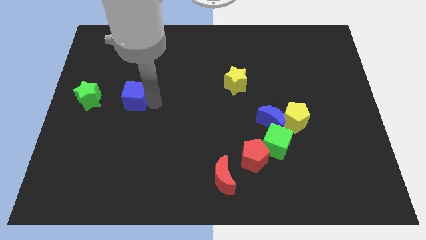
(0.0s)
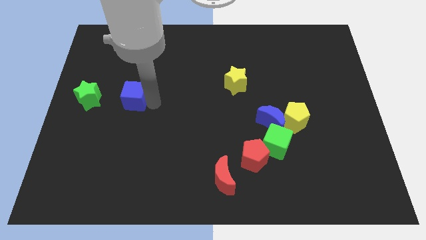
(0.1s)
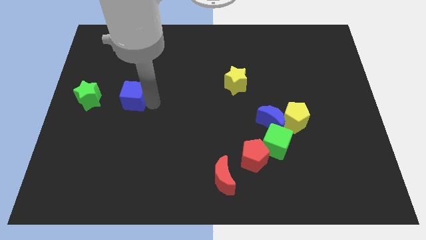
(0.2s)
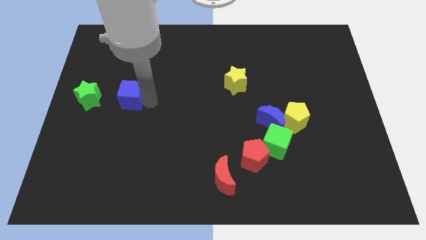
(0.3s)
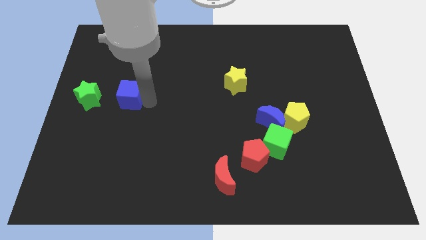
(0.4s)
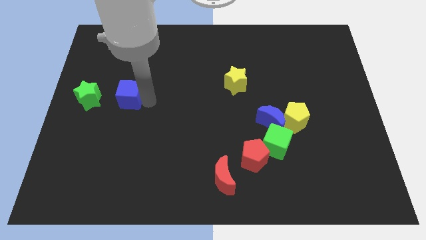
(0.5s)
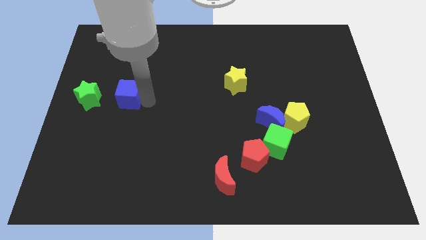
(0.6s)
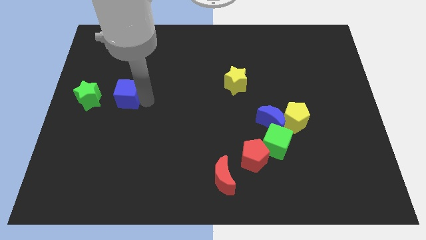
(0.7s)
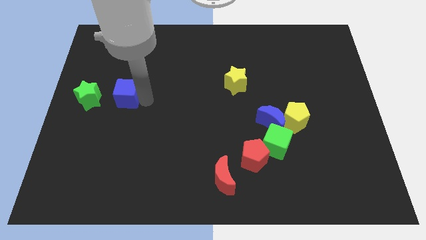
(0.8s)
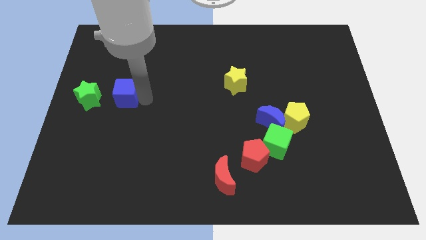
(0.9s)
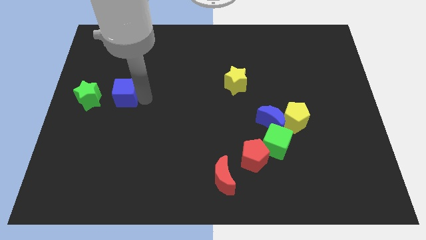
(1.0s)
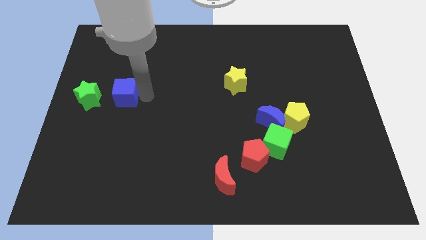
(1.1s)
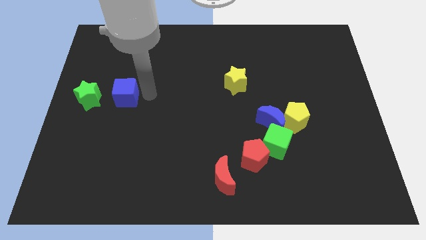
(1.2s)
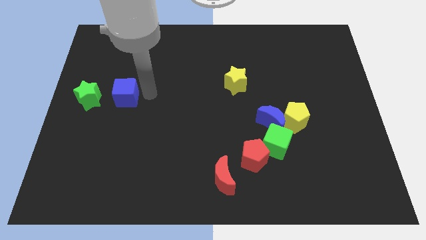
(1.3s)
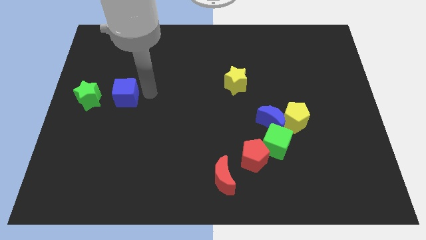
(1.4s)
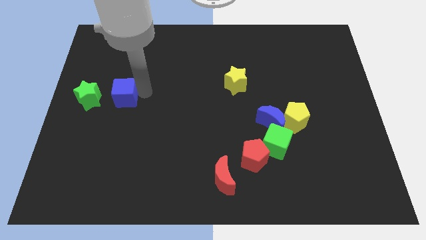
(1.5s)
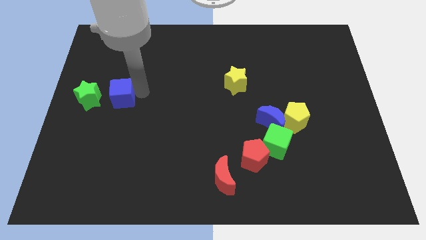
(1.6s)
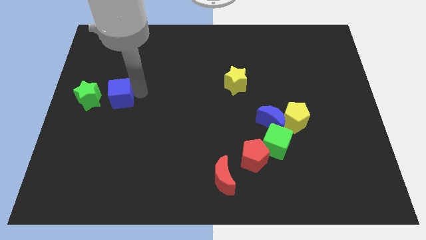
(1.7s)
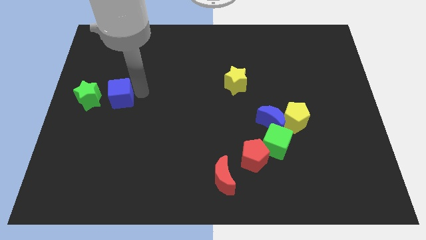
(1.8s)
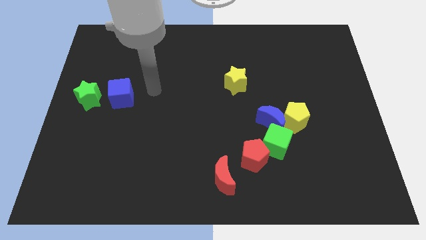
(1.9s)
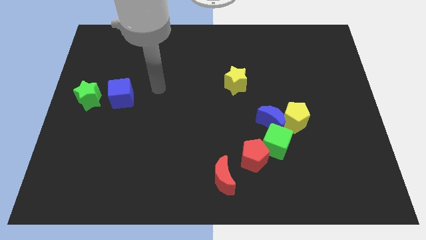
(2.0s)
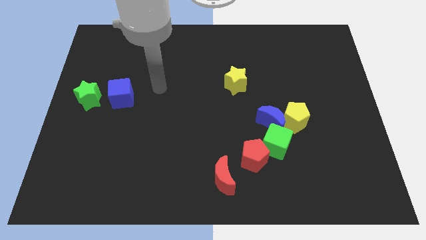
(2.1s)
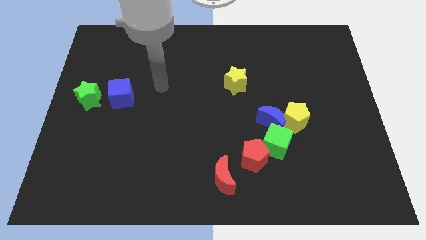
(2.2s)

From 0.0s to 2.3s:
push the blue cube to the right side of the green star

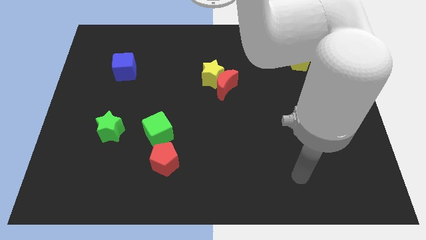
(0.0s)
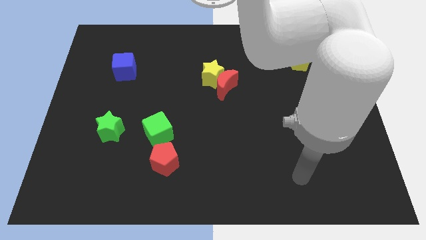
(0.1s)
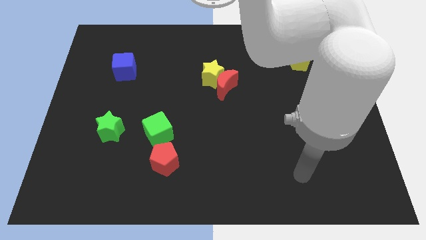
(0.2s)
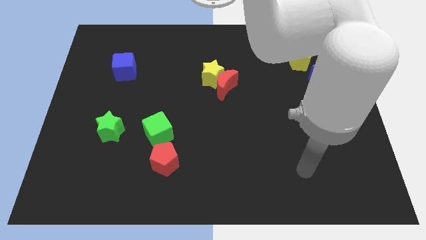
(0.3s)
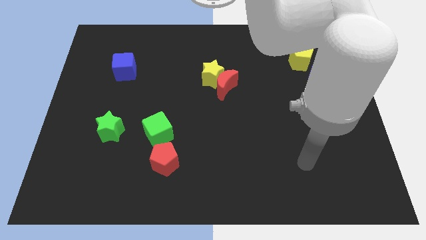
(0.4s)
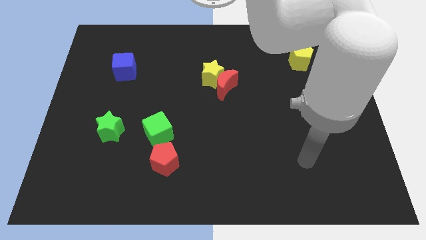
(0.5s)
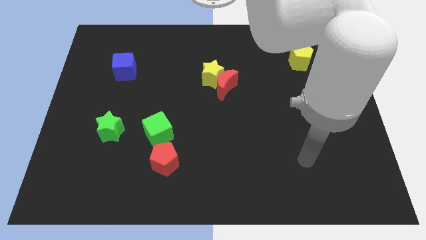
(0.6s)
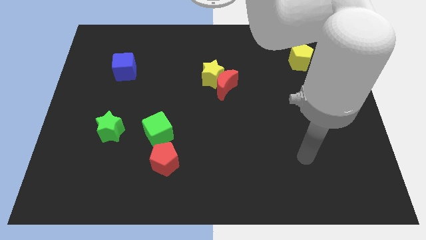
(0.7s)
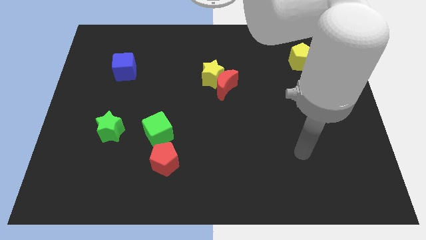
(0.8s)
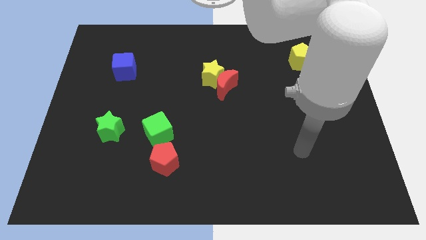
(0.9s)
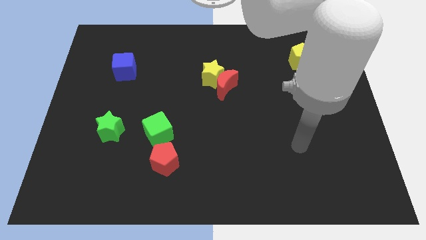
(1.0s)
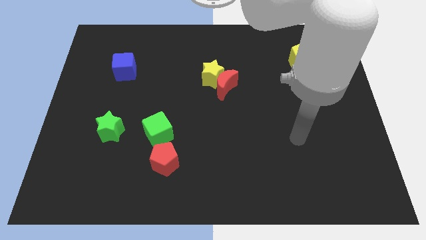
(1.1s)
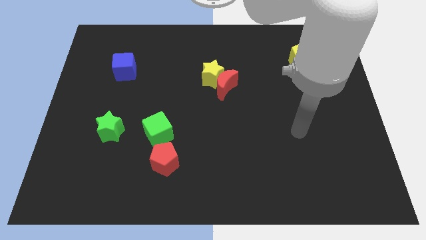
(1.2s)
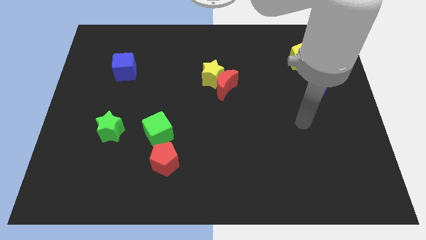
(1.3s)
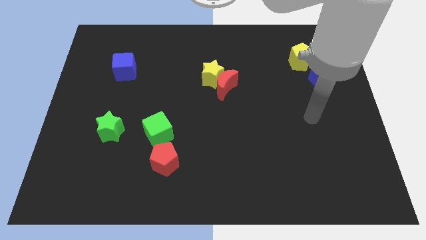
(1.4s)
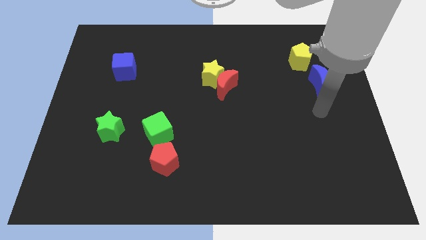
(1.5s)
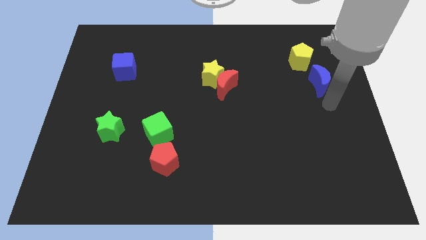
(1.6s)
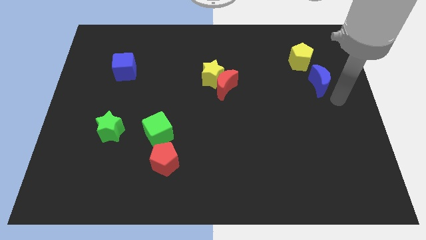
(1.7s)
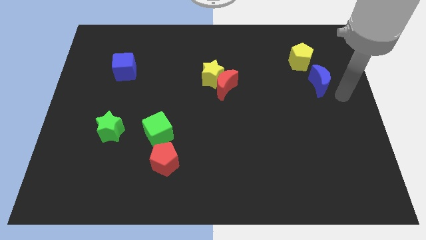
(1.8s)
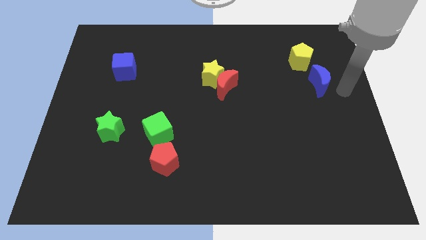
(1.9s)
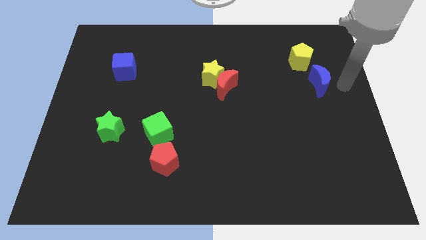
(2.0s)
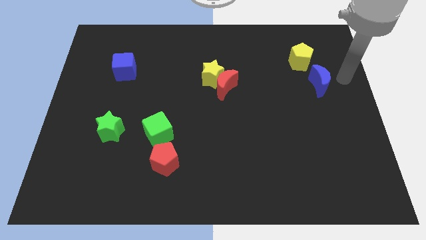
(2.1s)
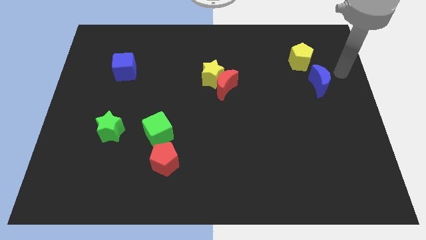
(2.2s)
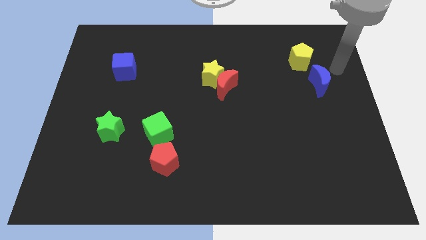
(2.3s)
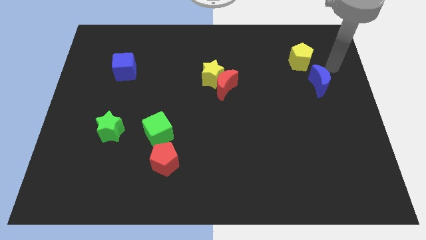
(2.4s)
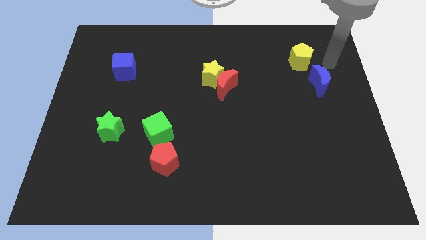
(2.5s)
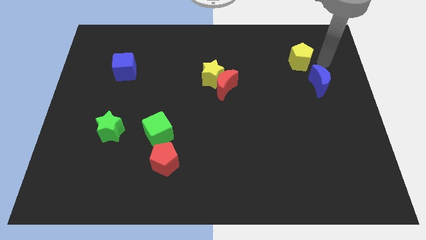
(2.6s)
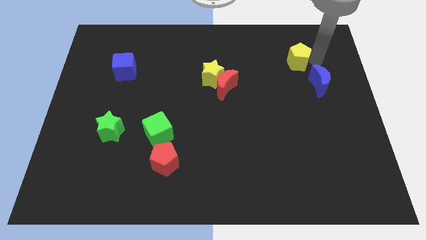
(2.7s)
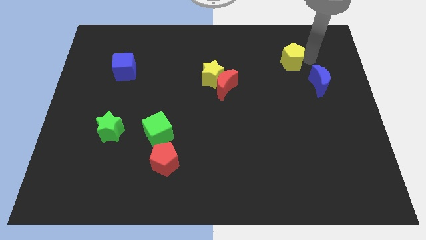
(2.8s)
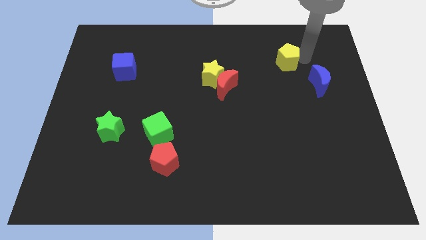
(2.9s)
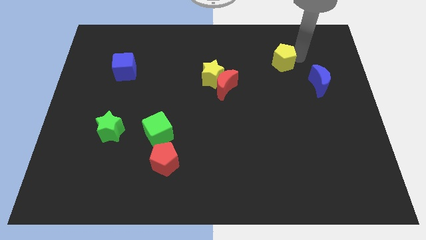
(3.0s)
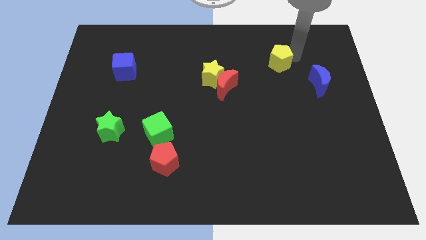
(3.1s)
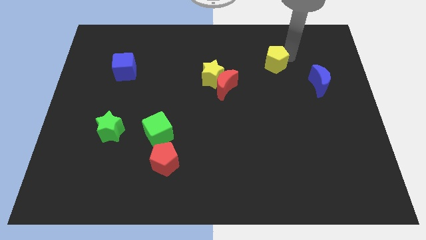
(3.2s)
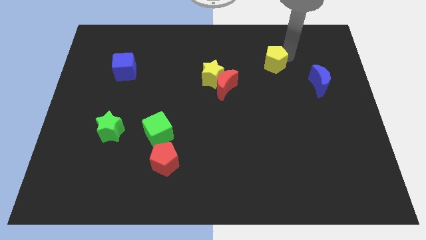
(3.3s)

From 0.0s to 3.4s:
push the yellow pentagon to the left side

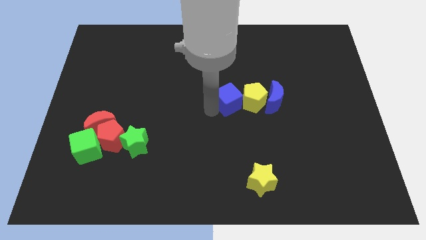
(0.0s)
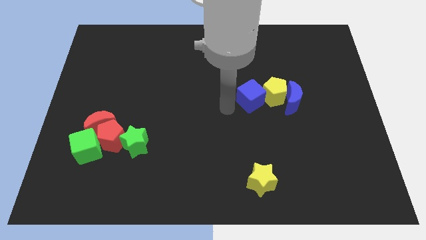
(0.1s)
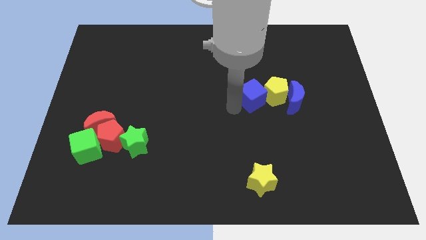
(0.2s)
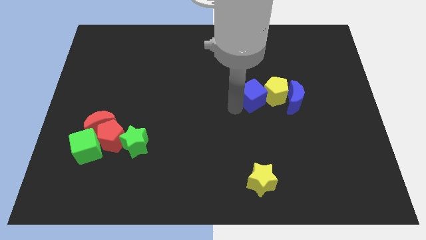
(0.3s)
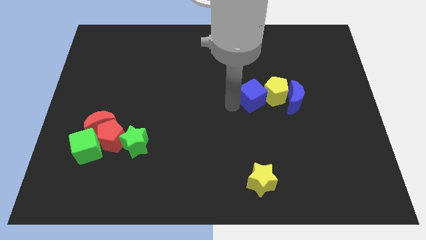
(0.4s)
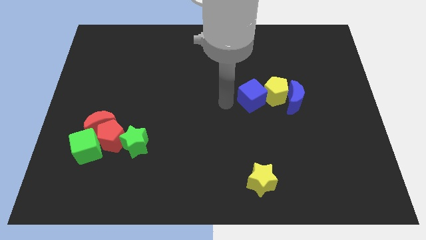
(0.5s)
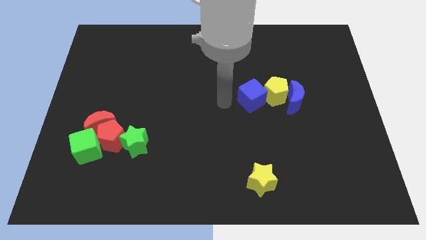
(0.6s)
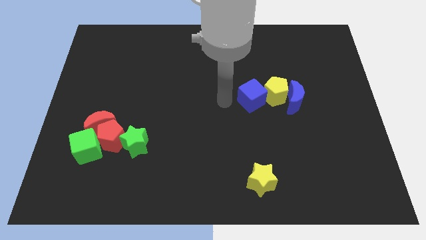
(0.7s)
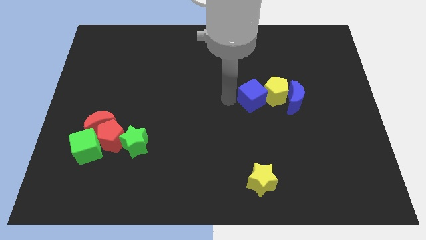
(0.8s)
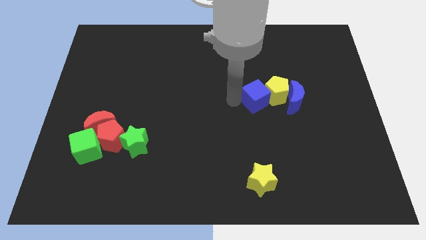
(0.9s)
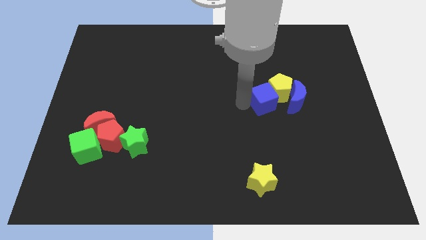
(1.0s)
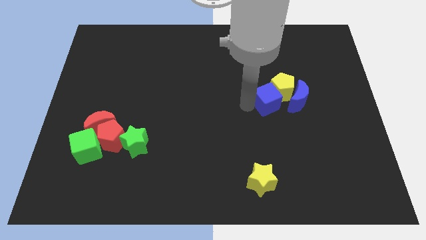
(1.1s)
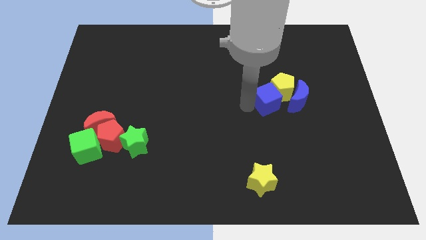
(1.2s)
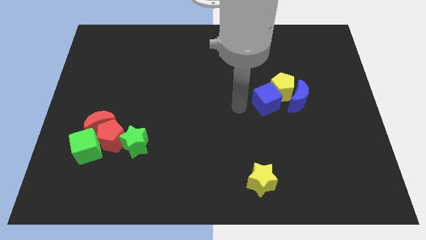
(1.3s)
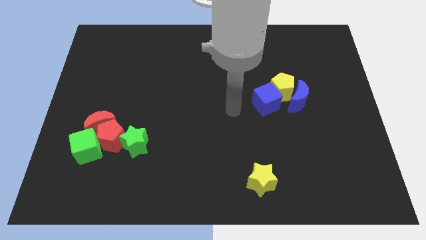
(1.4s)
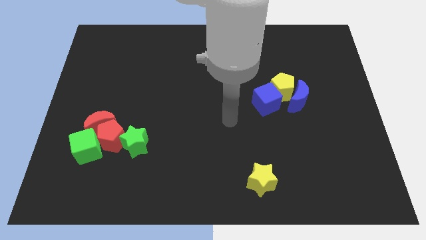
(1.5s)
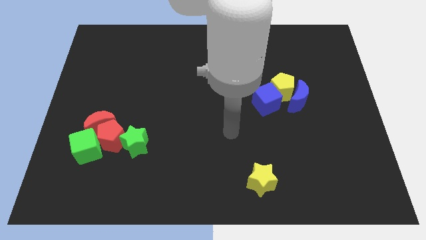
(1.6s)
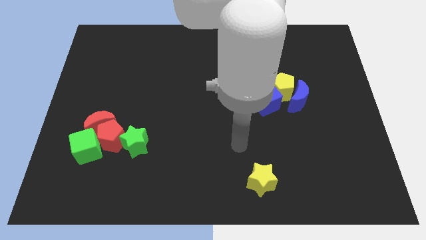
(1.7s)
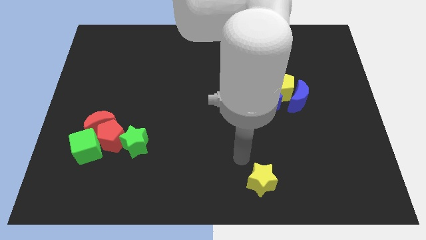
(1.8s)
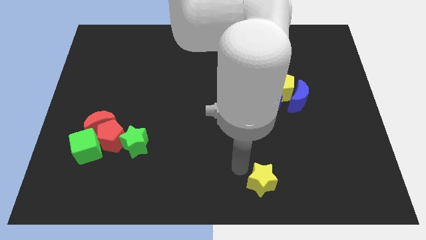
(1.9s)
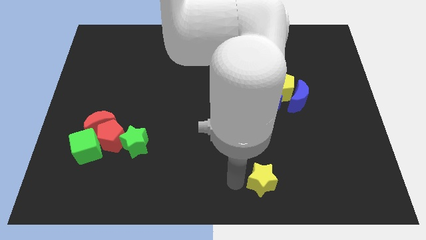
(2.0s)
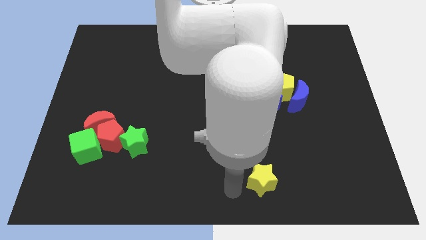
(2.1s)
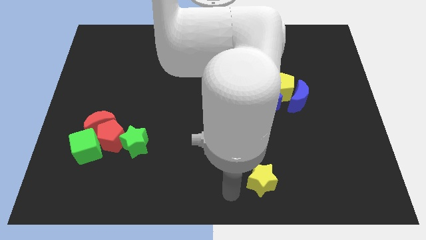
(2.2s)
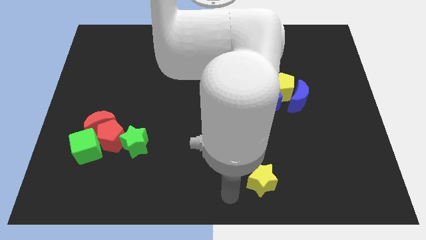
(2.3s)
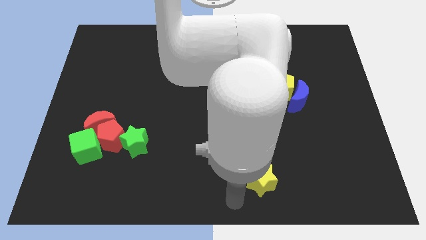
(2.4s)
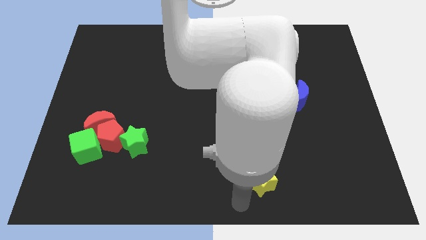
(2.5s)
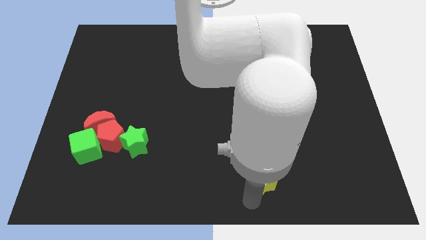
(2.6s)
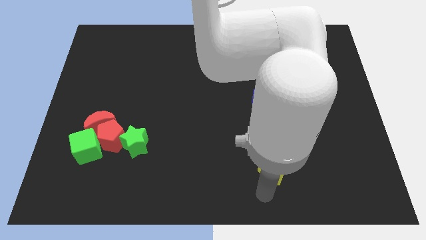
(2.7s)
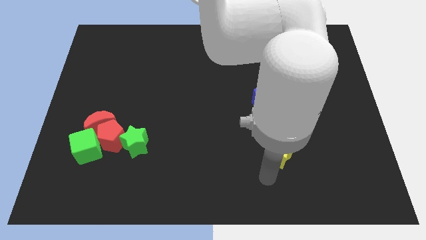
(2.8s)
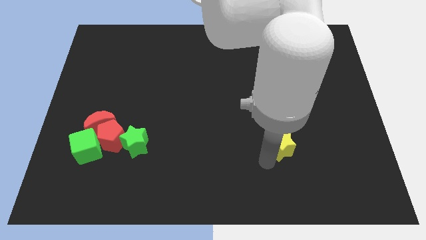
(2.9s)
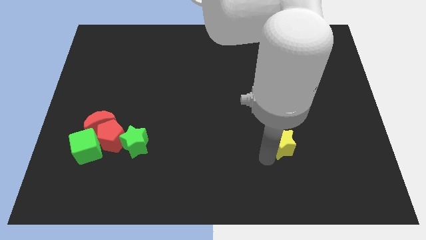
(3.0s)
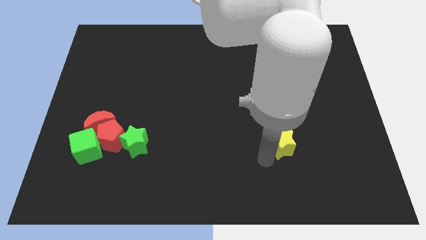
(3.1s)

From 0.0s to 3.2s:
move the blue cube into the yellow pentagon
